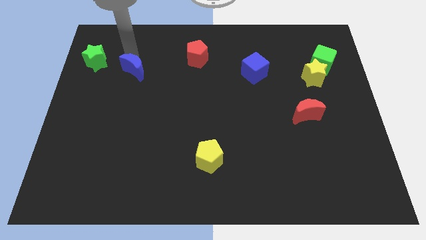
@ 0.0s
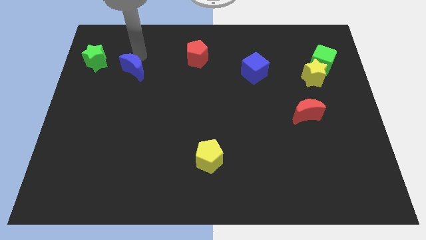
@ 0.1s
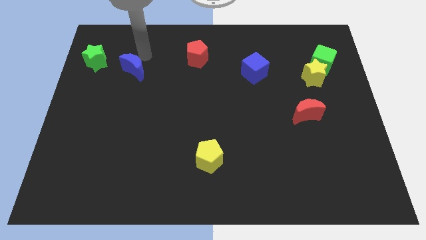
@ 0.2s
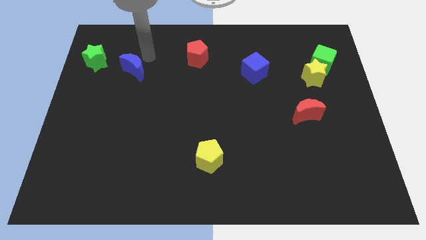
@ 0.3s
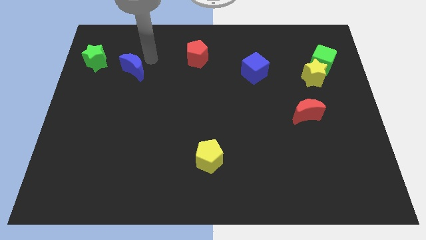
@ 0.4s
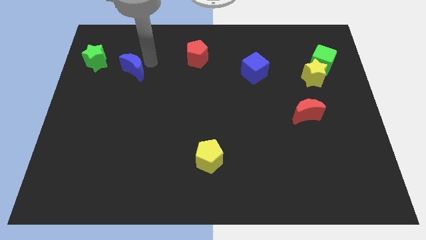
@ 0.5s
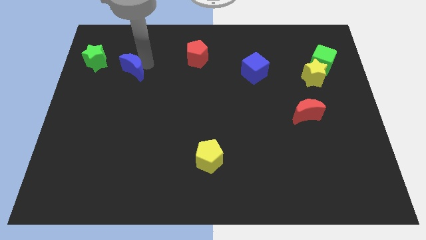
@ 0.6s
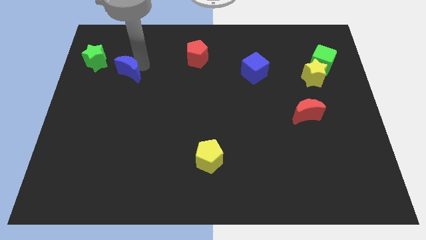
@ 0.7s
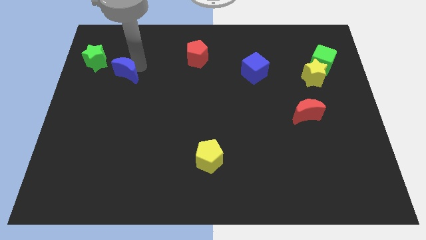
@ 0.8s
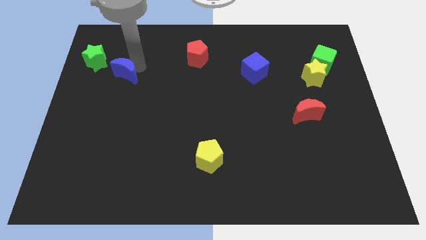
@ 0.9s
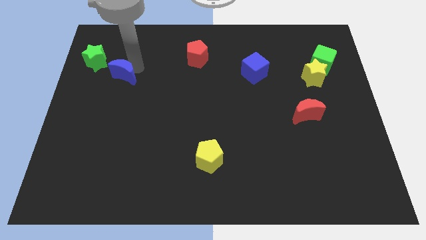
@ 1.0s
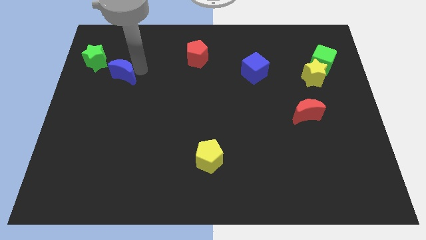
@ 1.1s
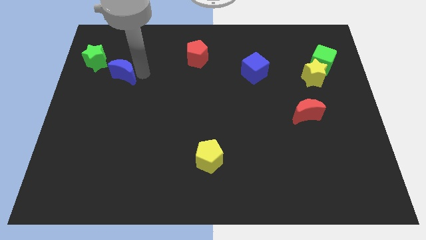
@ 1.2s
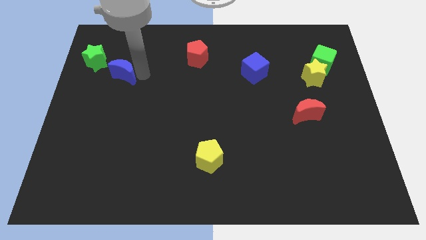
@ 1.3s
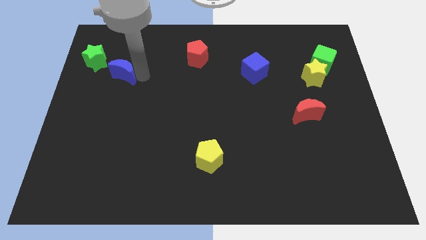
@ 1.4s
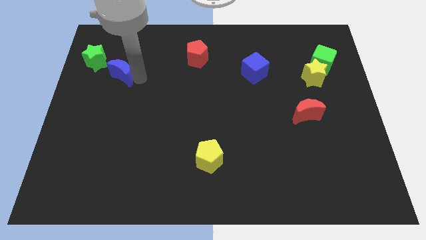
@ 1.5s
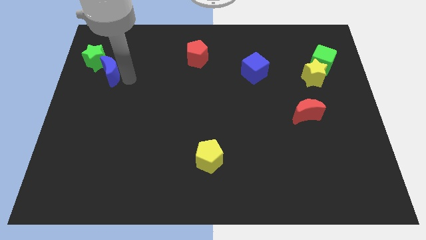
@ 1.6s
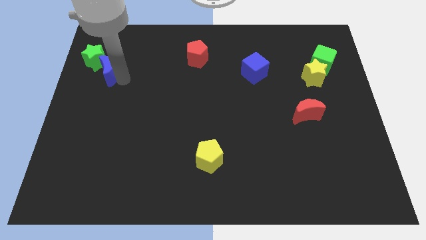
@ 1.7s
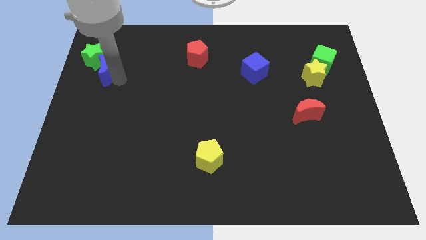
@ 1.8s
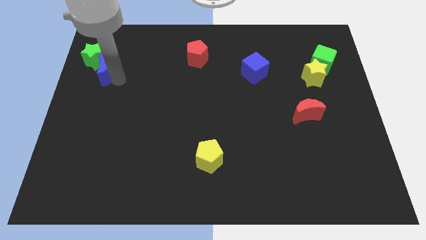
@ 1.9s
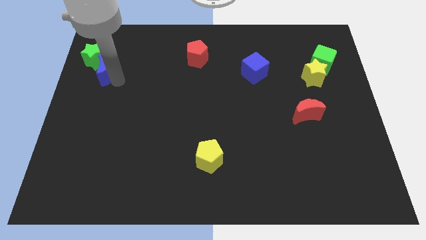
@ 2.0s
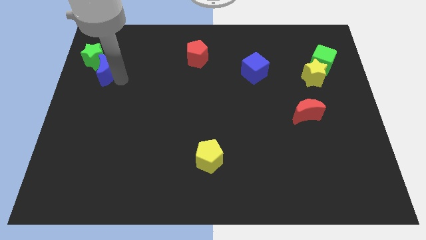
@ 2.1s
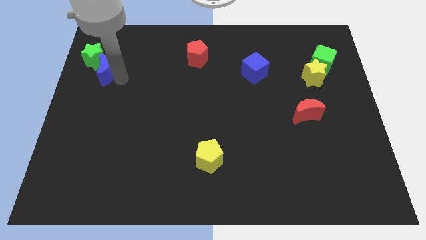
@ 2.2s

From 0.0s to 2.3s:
push the blue crescent into the green star

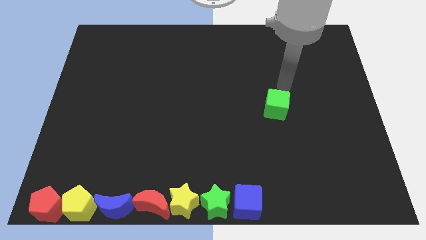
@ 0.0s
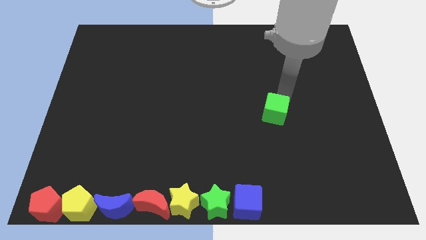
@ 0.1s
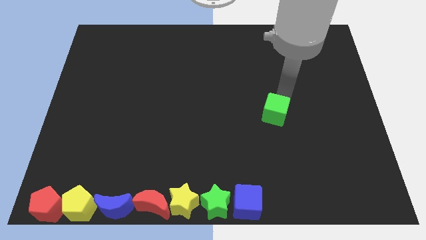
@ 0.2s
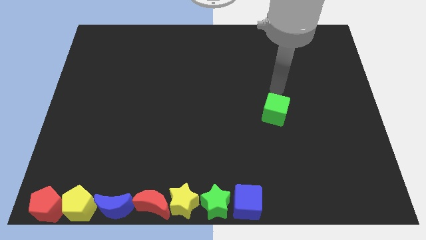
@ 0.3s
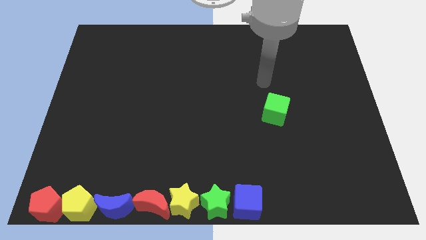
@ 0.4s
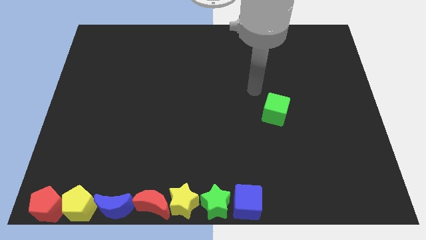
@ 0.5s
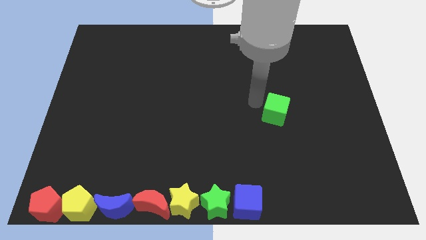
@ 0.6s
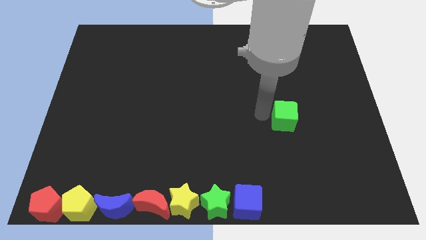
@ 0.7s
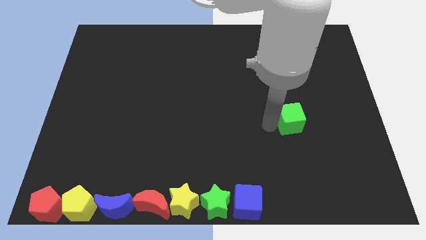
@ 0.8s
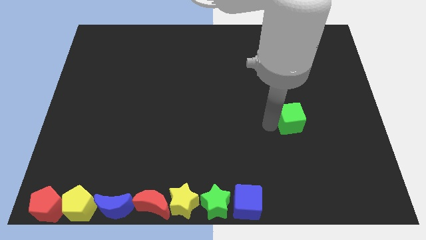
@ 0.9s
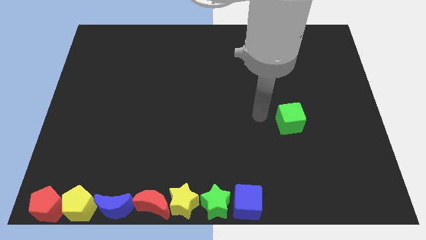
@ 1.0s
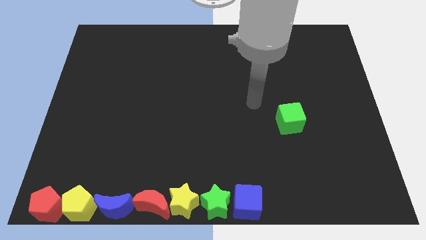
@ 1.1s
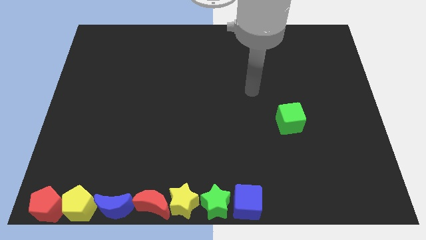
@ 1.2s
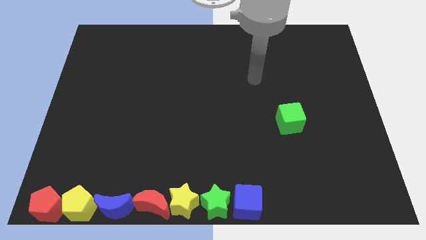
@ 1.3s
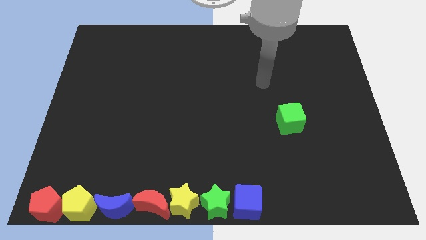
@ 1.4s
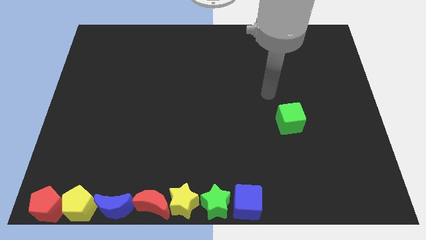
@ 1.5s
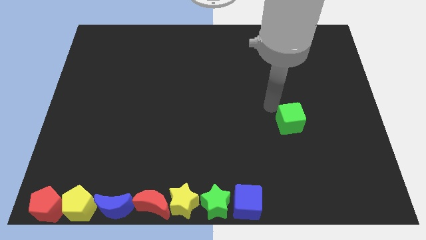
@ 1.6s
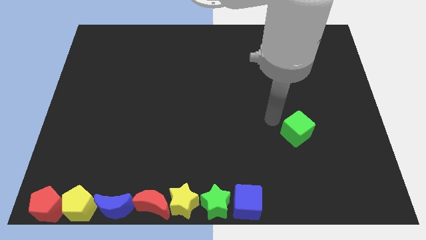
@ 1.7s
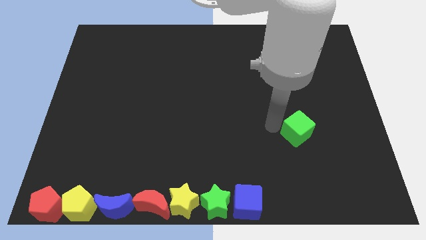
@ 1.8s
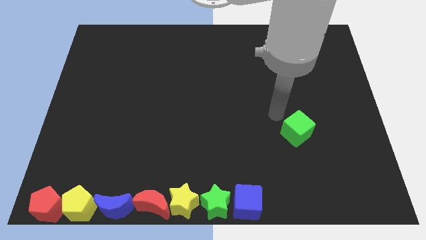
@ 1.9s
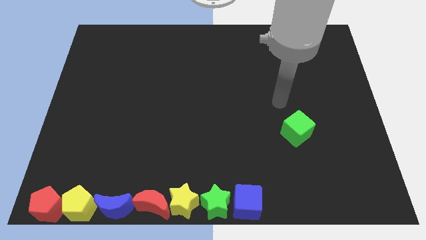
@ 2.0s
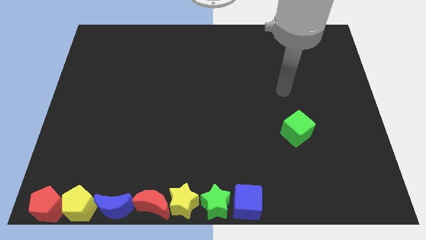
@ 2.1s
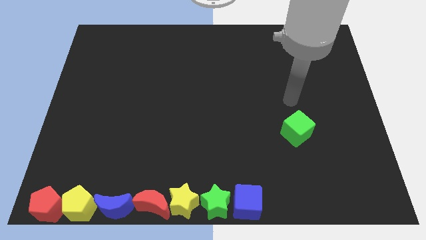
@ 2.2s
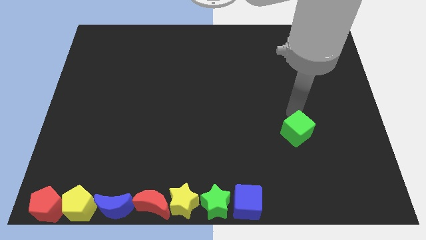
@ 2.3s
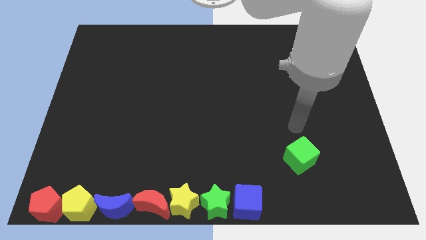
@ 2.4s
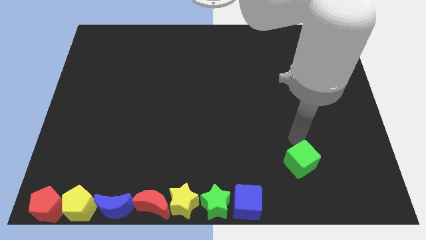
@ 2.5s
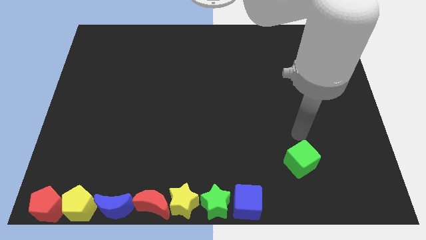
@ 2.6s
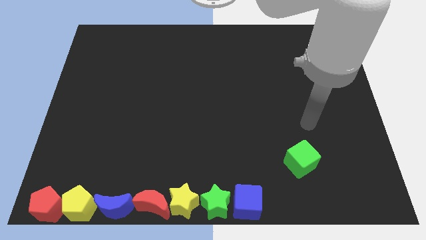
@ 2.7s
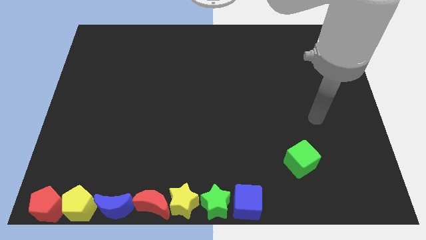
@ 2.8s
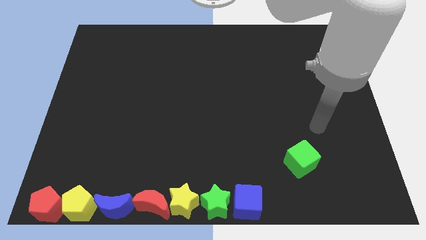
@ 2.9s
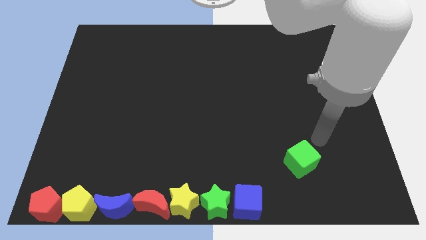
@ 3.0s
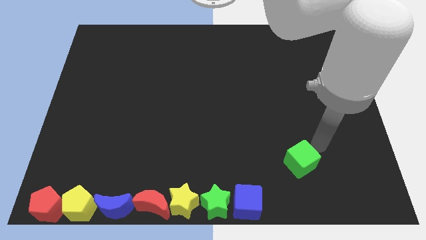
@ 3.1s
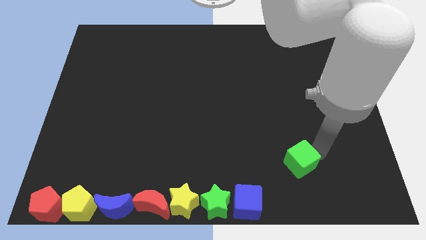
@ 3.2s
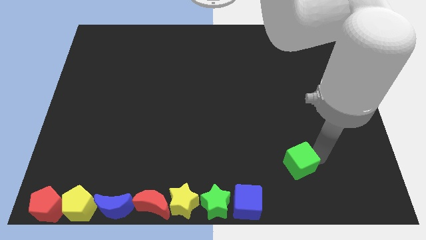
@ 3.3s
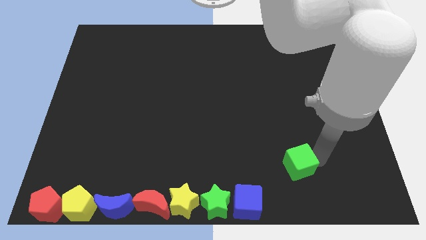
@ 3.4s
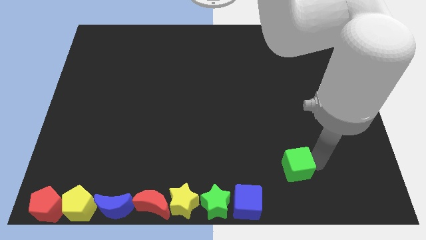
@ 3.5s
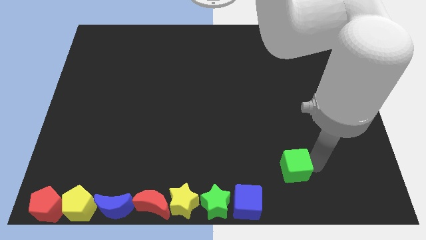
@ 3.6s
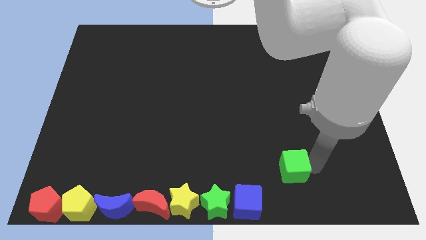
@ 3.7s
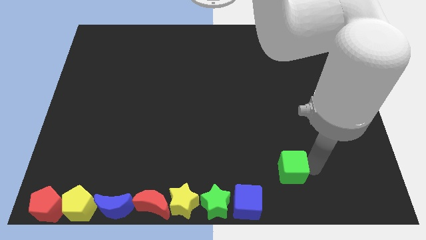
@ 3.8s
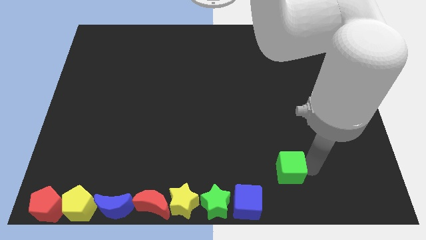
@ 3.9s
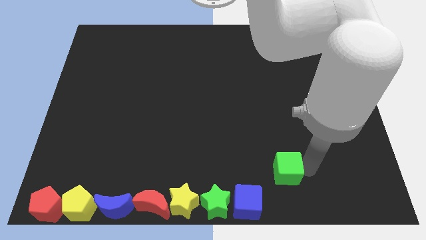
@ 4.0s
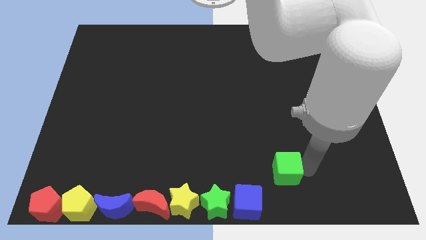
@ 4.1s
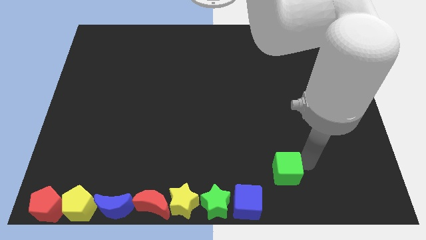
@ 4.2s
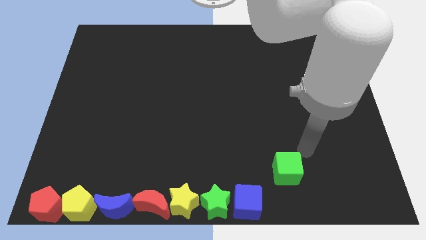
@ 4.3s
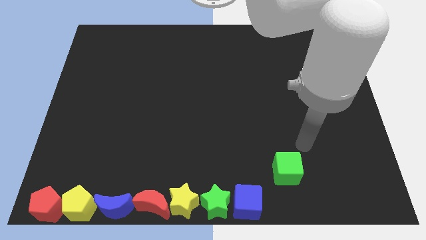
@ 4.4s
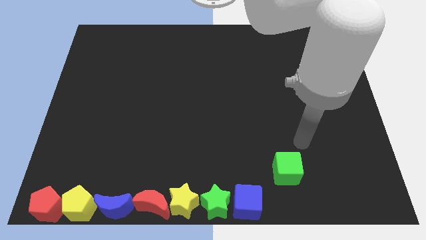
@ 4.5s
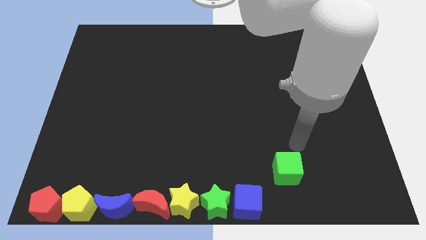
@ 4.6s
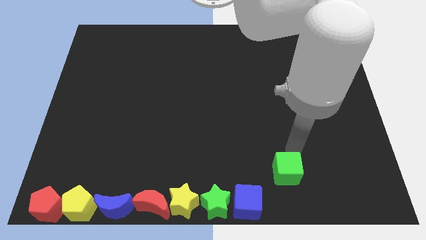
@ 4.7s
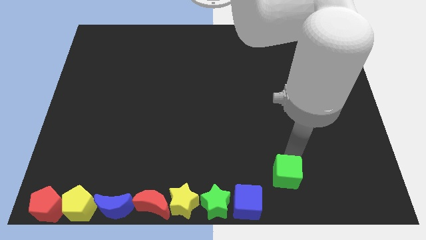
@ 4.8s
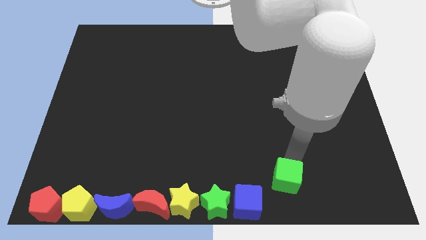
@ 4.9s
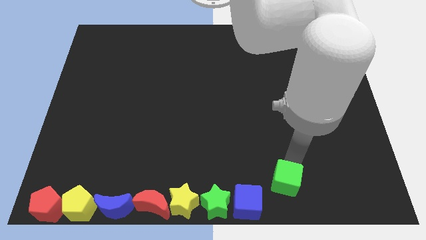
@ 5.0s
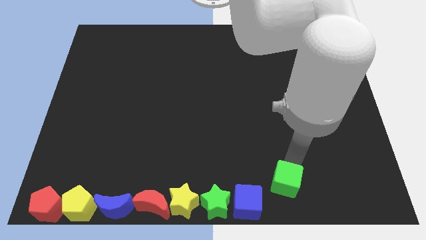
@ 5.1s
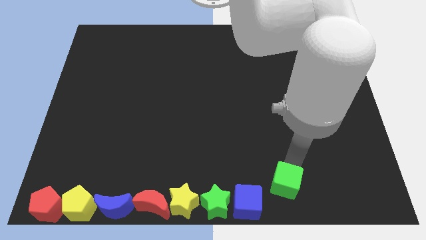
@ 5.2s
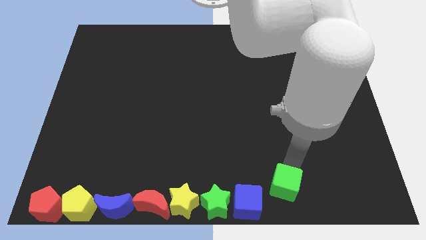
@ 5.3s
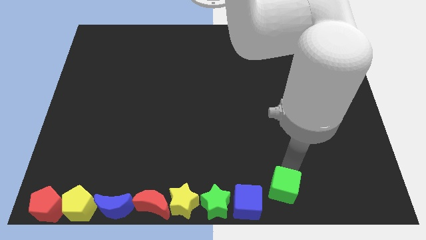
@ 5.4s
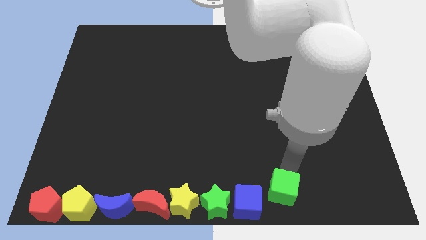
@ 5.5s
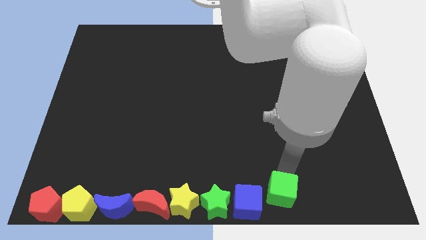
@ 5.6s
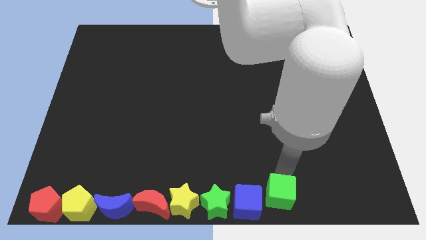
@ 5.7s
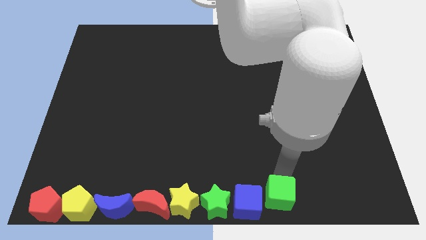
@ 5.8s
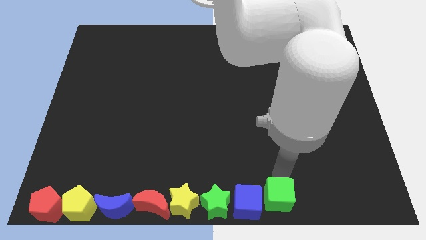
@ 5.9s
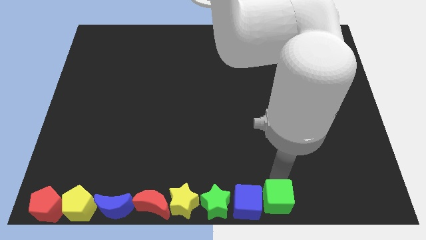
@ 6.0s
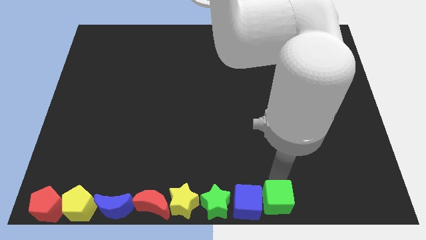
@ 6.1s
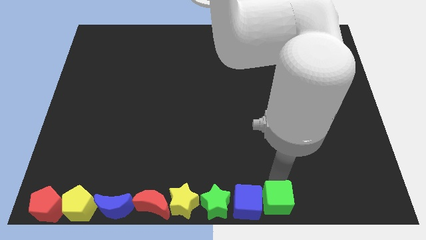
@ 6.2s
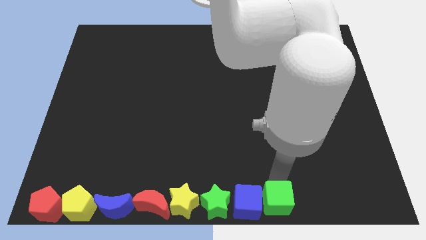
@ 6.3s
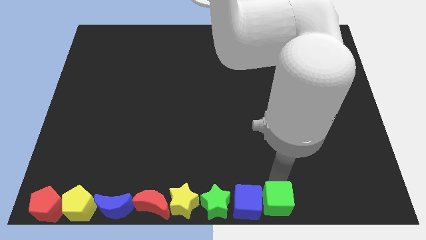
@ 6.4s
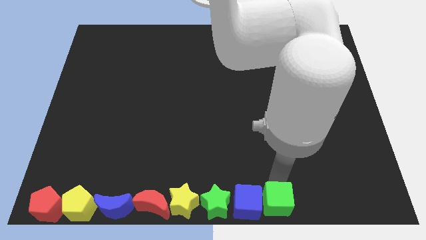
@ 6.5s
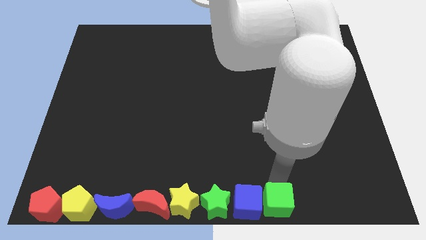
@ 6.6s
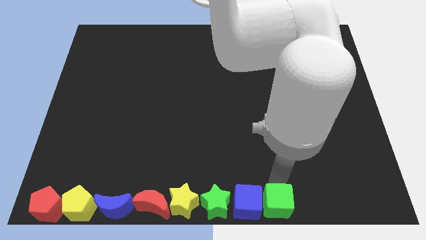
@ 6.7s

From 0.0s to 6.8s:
move the green cube right to the blue cube

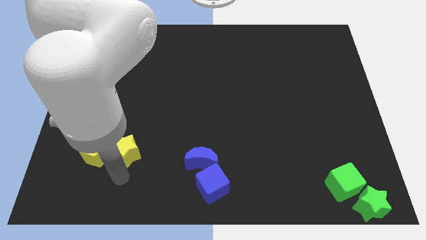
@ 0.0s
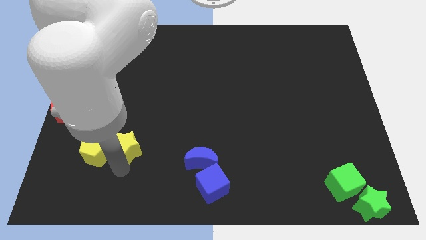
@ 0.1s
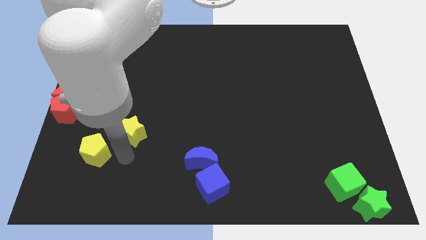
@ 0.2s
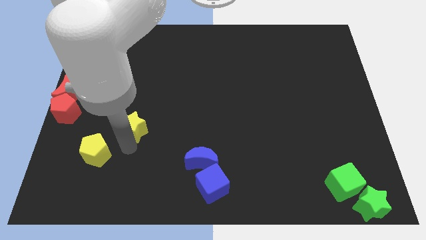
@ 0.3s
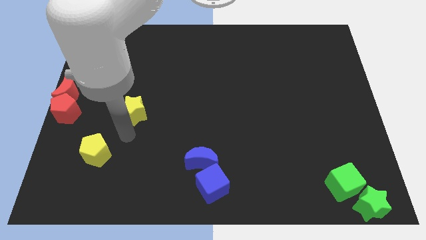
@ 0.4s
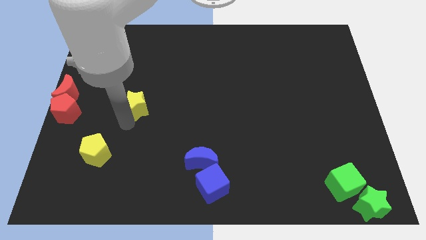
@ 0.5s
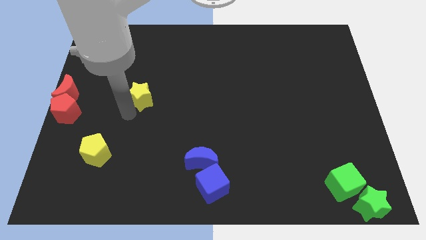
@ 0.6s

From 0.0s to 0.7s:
separate the yellow blocks
